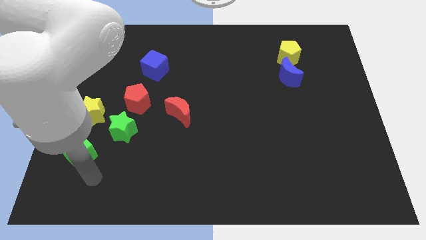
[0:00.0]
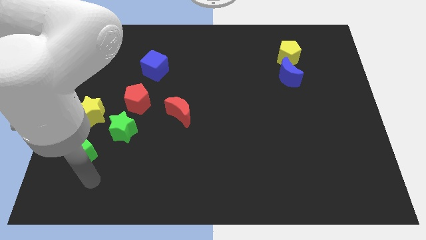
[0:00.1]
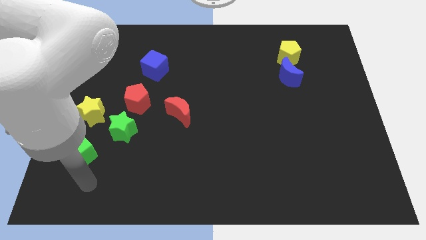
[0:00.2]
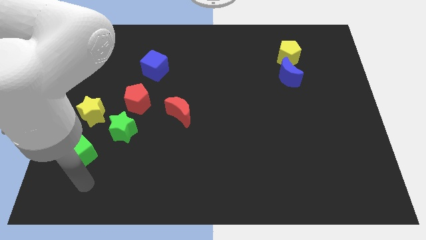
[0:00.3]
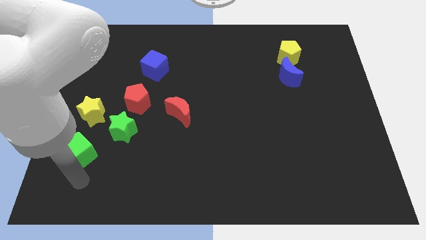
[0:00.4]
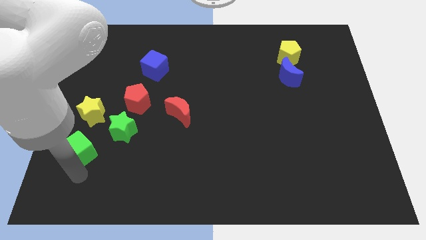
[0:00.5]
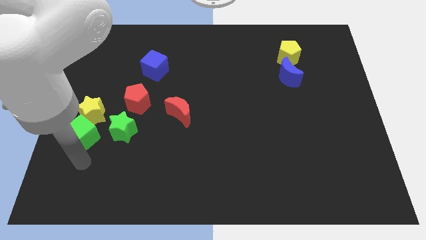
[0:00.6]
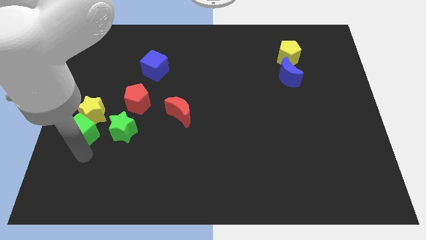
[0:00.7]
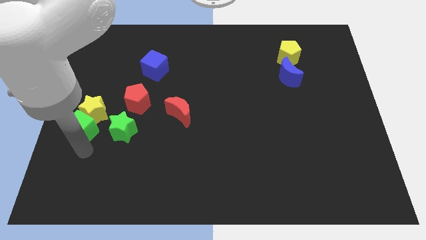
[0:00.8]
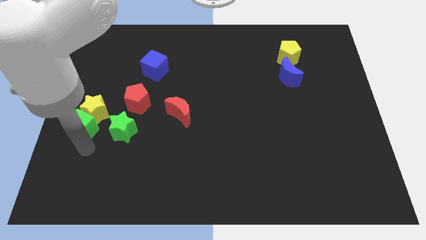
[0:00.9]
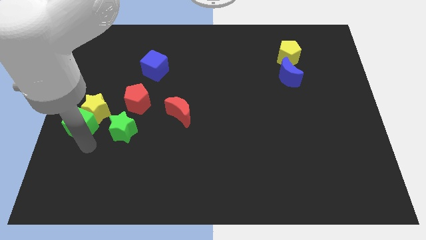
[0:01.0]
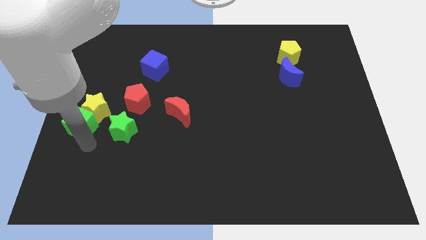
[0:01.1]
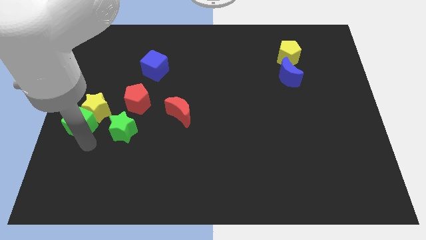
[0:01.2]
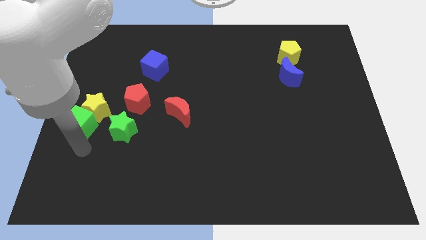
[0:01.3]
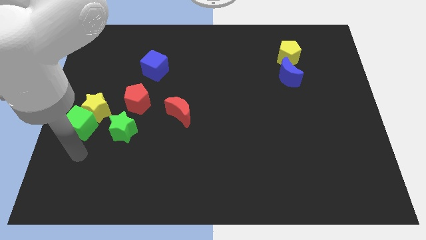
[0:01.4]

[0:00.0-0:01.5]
move the green cube upwards slightly

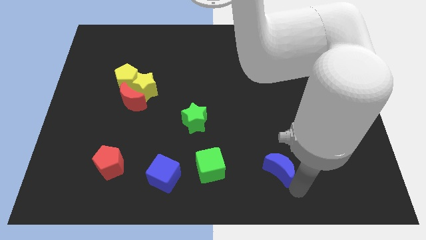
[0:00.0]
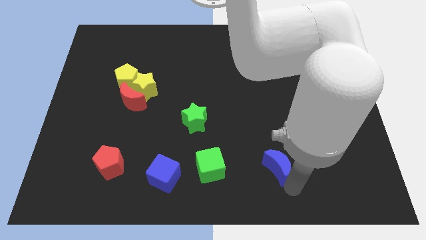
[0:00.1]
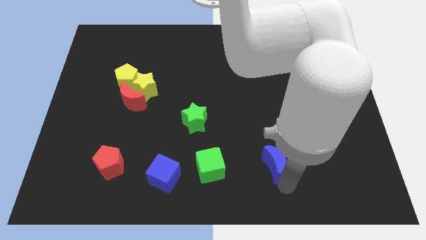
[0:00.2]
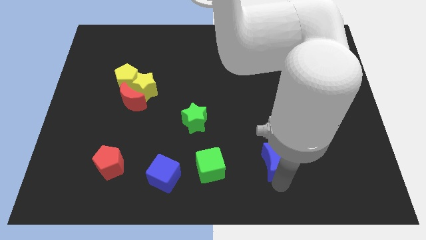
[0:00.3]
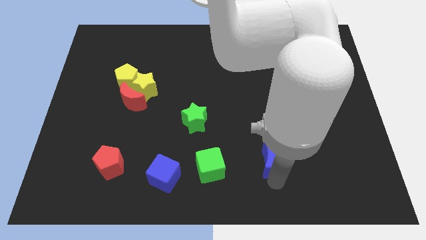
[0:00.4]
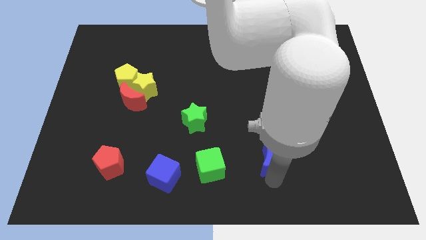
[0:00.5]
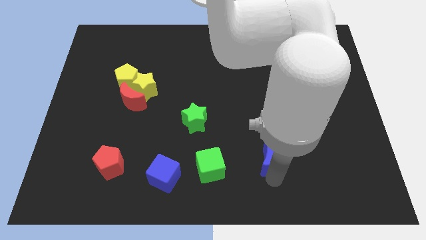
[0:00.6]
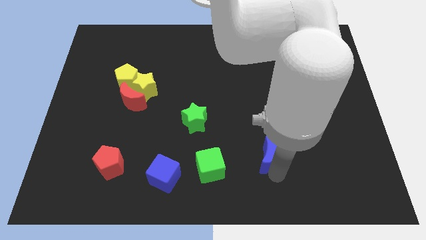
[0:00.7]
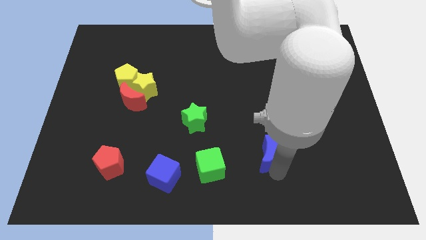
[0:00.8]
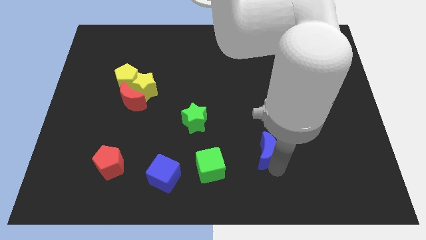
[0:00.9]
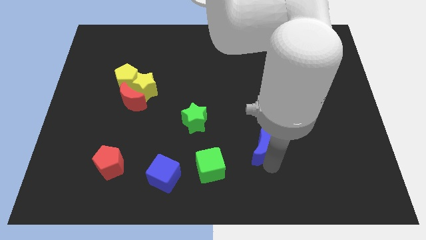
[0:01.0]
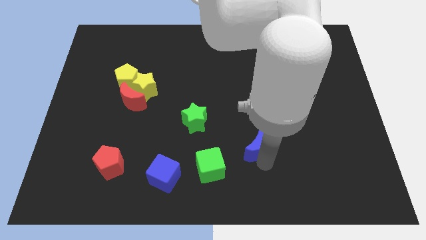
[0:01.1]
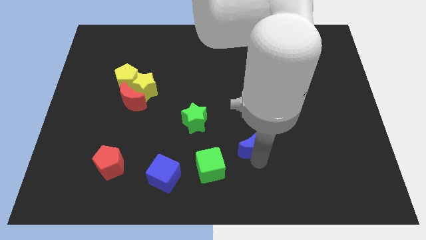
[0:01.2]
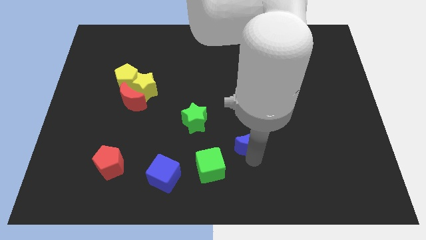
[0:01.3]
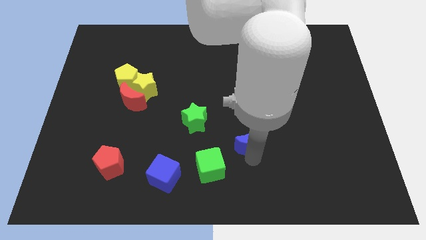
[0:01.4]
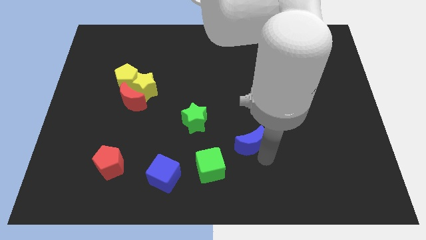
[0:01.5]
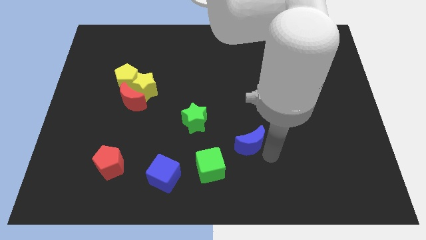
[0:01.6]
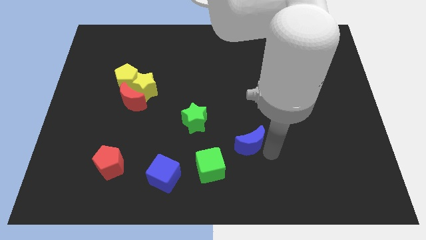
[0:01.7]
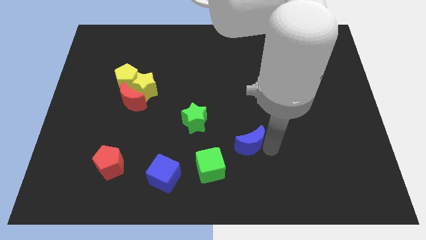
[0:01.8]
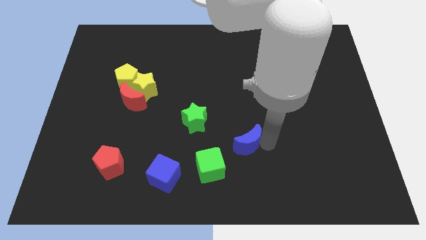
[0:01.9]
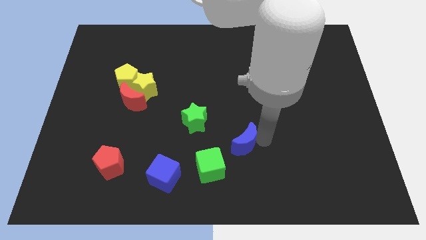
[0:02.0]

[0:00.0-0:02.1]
place blue moon to the top right of green cube

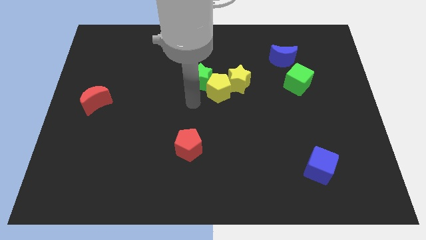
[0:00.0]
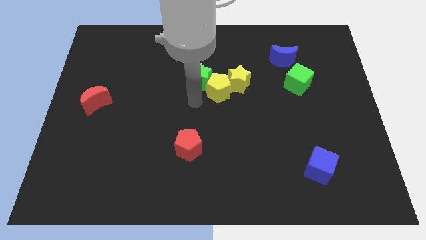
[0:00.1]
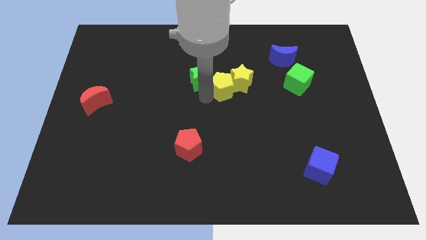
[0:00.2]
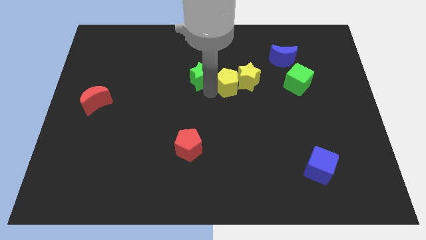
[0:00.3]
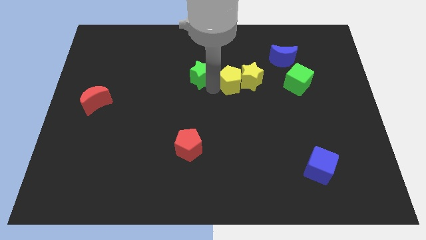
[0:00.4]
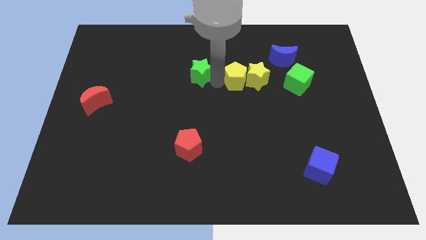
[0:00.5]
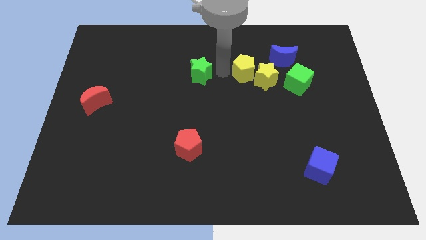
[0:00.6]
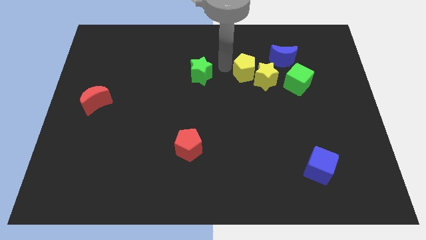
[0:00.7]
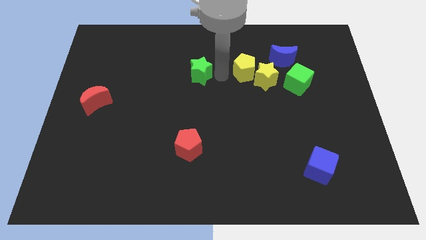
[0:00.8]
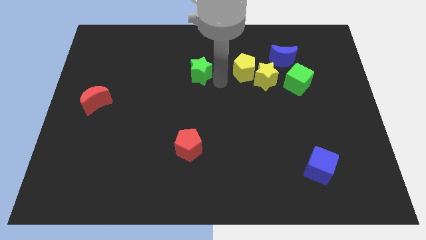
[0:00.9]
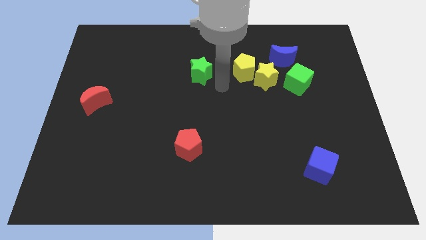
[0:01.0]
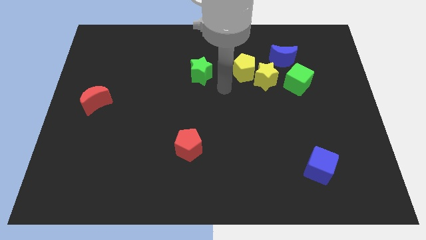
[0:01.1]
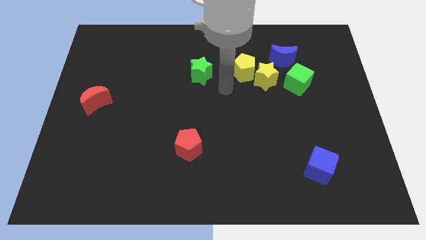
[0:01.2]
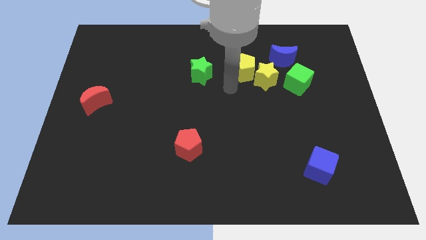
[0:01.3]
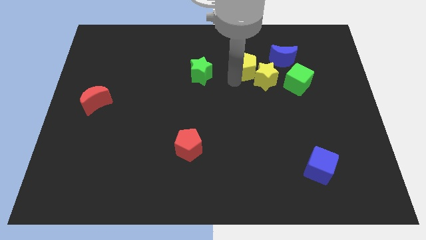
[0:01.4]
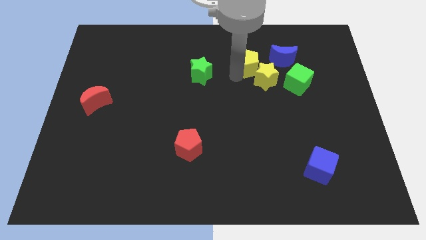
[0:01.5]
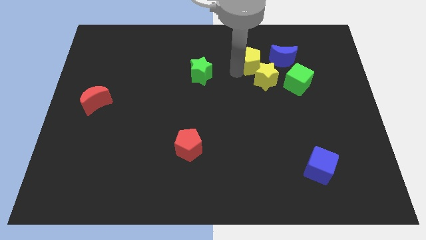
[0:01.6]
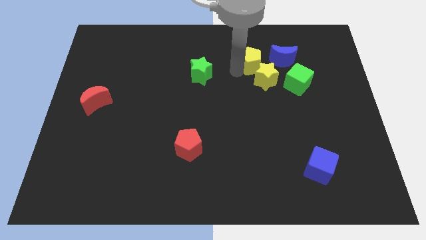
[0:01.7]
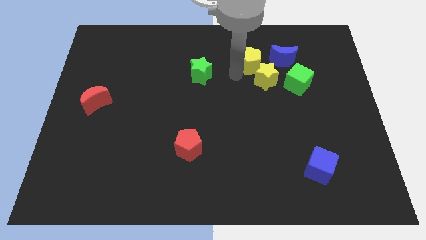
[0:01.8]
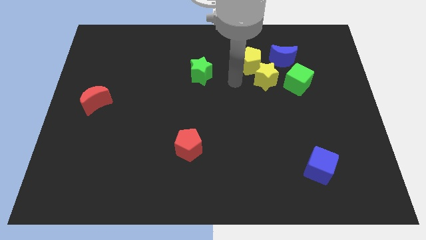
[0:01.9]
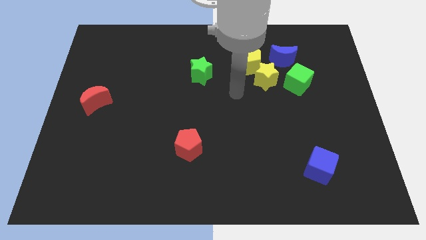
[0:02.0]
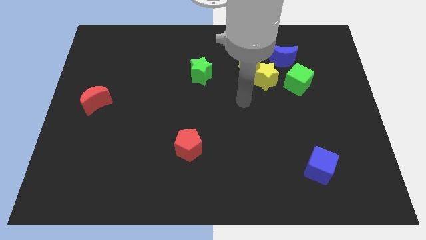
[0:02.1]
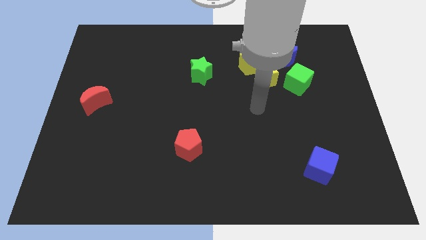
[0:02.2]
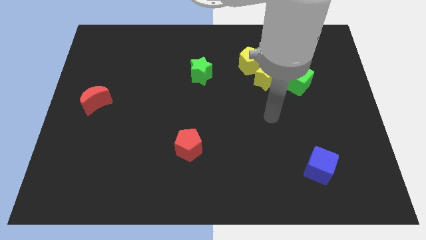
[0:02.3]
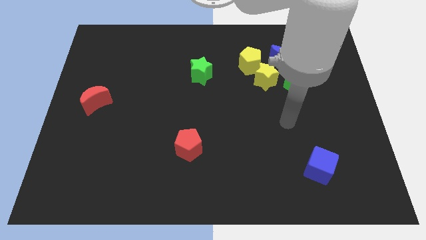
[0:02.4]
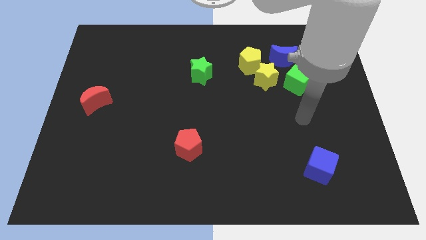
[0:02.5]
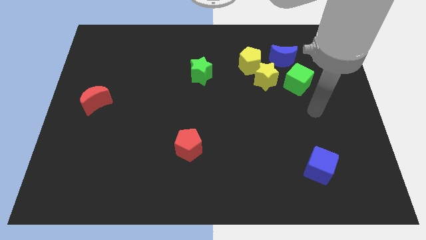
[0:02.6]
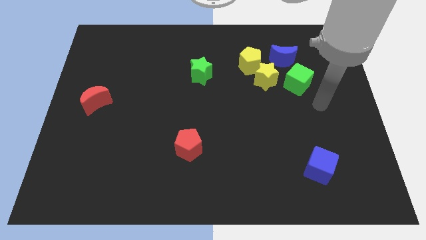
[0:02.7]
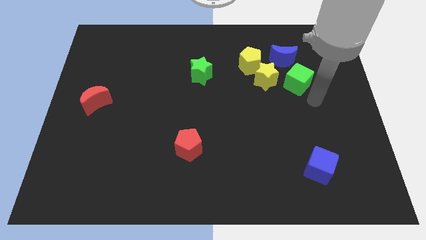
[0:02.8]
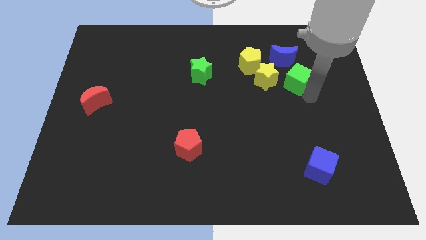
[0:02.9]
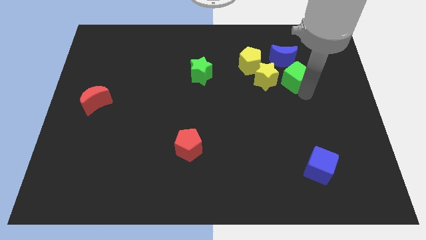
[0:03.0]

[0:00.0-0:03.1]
move the yellow pentagon above the yellow star

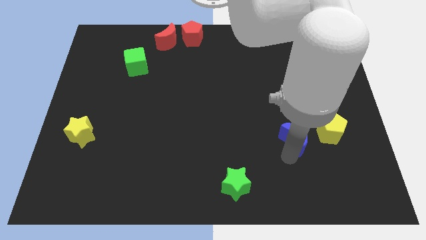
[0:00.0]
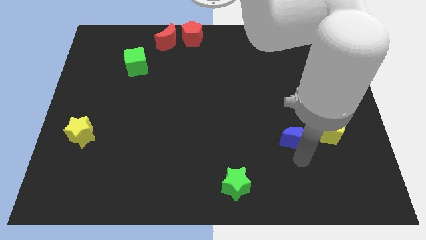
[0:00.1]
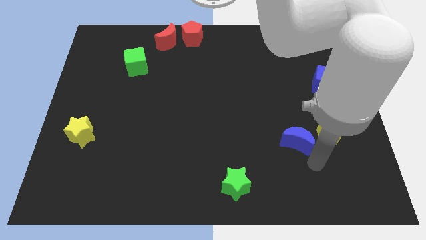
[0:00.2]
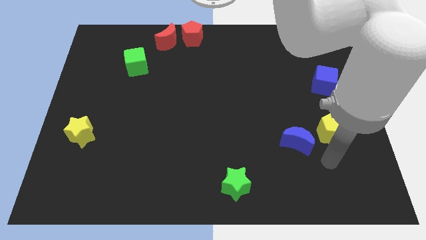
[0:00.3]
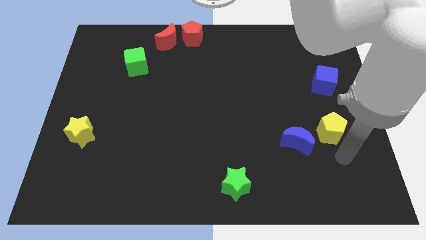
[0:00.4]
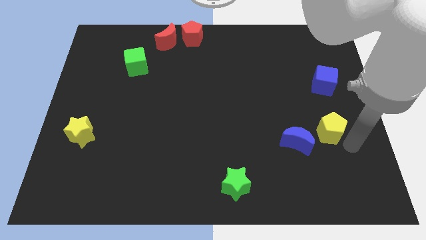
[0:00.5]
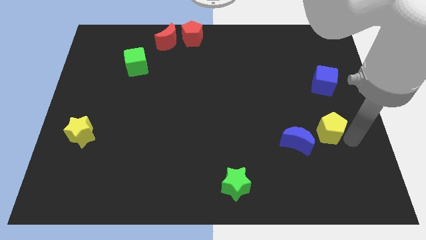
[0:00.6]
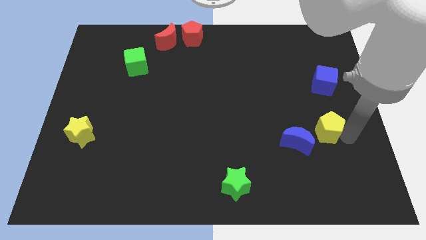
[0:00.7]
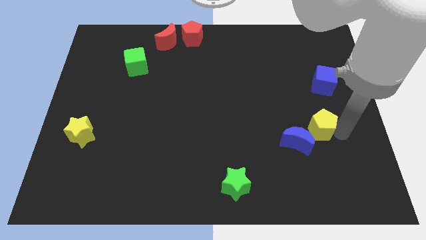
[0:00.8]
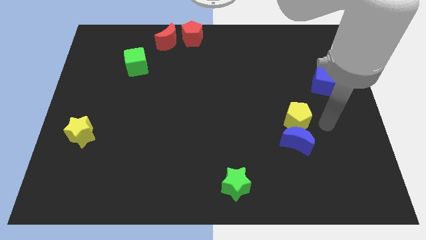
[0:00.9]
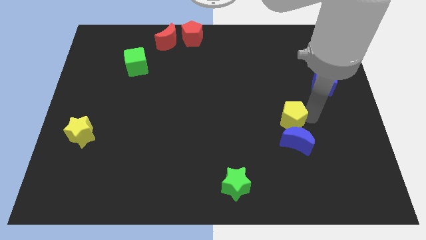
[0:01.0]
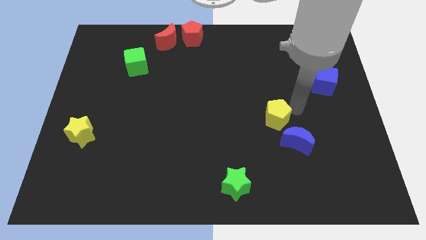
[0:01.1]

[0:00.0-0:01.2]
push the yellow pentagon top left to the blue moon

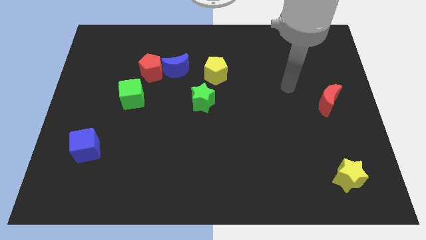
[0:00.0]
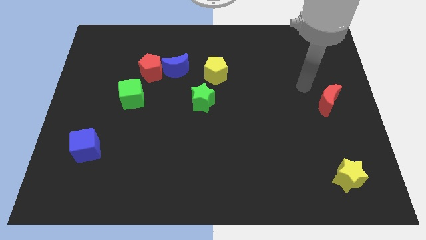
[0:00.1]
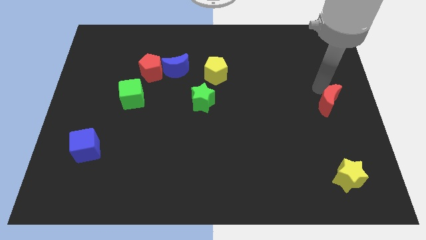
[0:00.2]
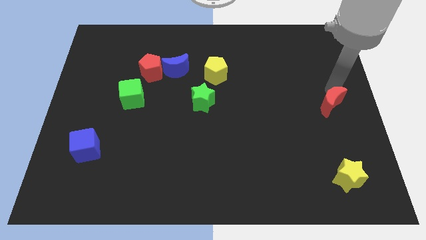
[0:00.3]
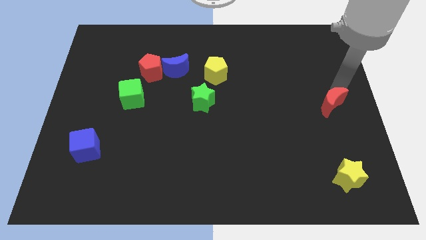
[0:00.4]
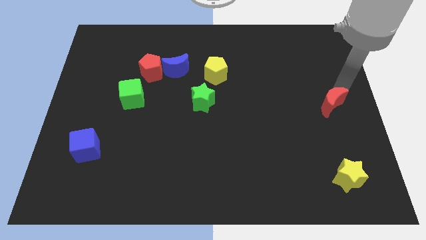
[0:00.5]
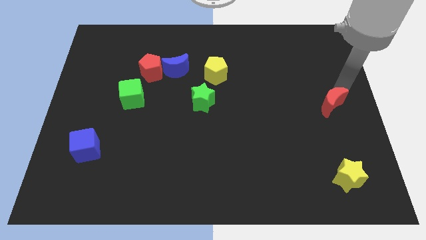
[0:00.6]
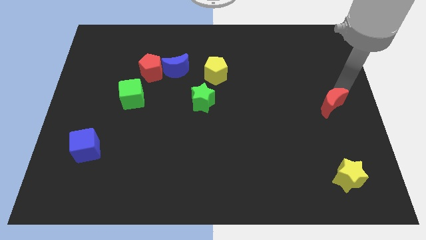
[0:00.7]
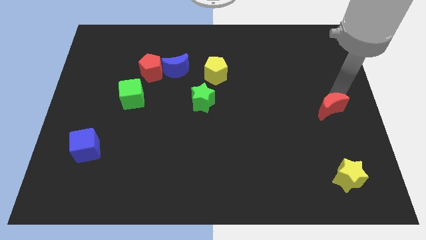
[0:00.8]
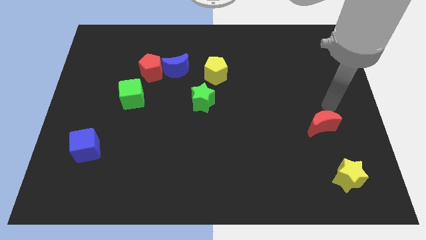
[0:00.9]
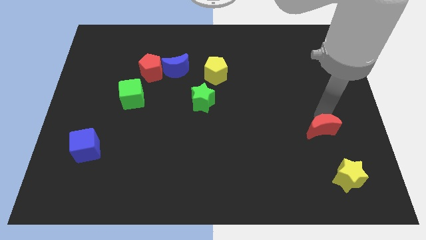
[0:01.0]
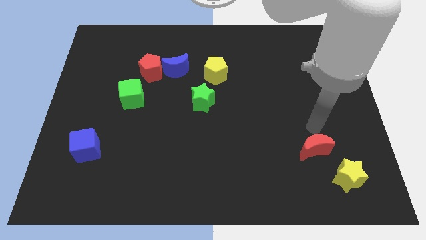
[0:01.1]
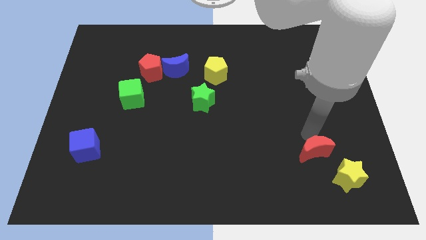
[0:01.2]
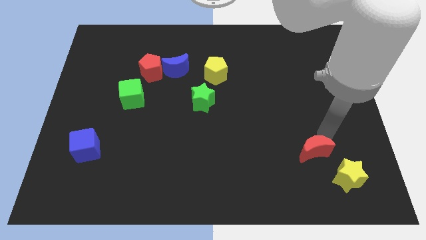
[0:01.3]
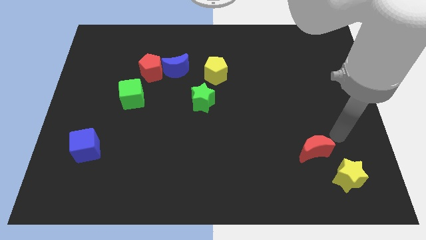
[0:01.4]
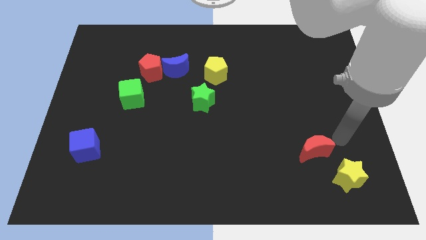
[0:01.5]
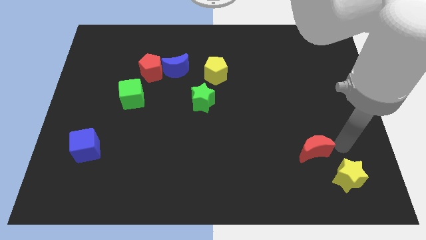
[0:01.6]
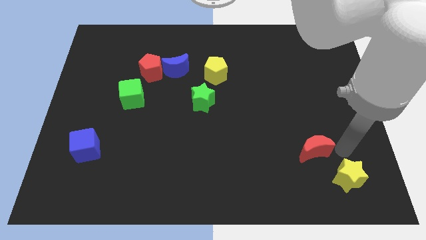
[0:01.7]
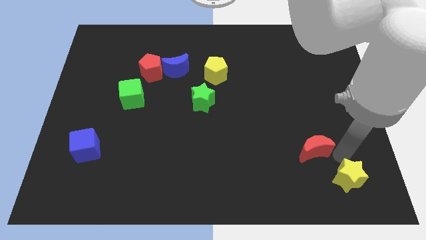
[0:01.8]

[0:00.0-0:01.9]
slide the red moon to the top left side of the yellow star
